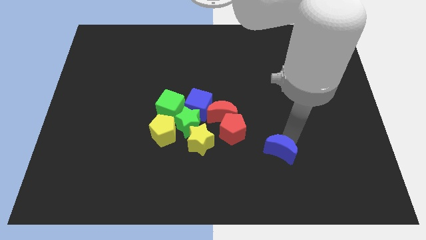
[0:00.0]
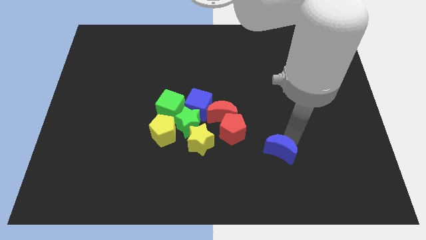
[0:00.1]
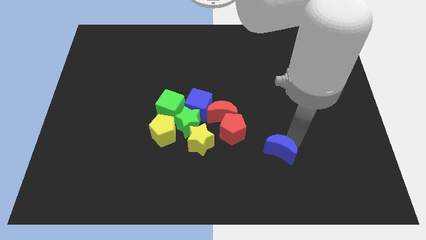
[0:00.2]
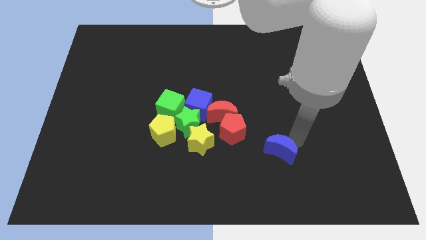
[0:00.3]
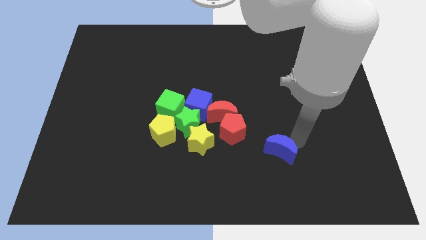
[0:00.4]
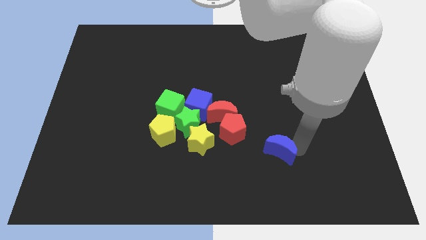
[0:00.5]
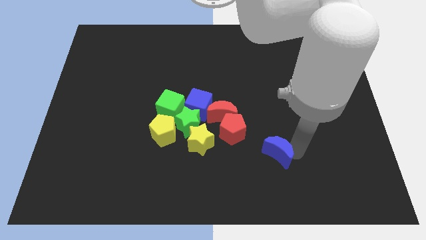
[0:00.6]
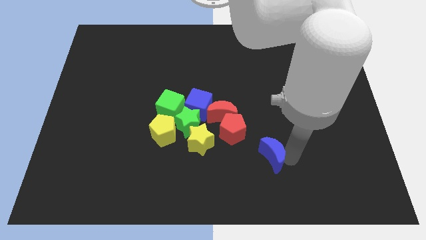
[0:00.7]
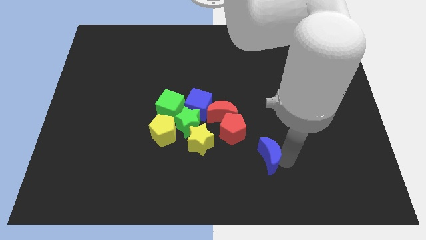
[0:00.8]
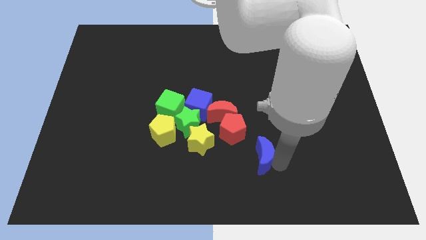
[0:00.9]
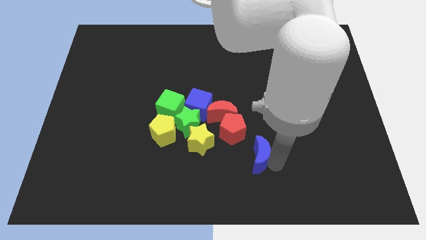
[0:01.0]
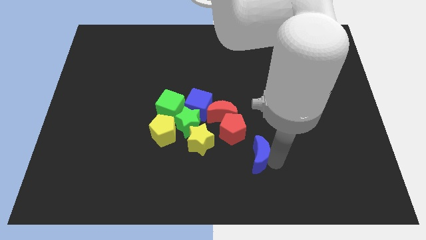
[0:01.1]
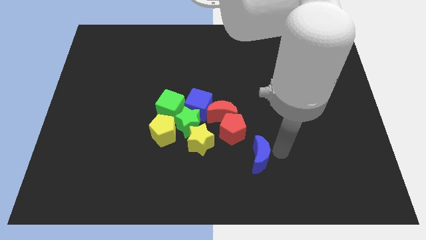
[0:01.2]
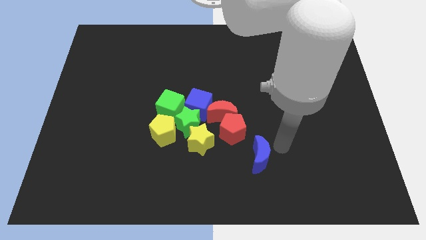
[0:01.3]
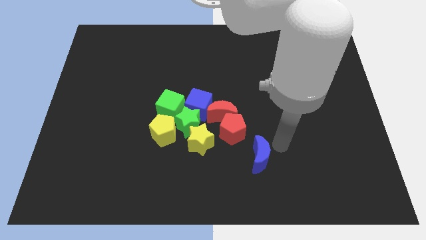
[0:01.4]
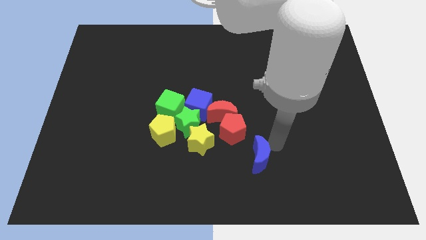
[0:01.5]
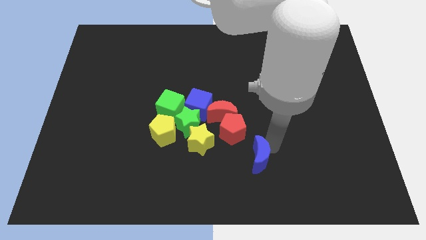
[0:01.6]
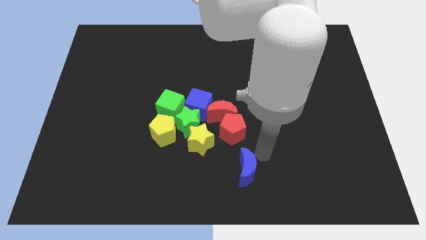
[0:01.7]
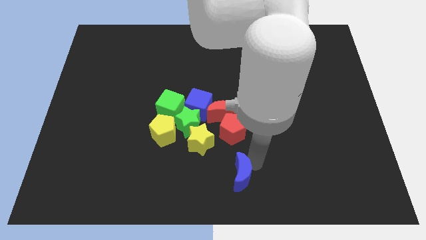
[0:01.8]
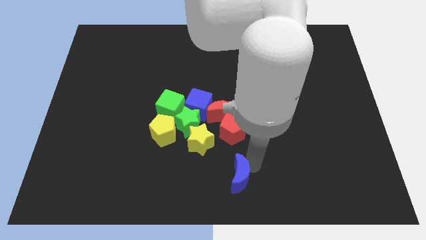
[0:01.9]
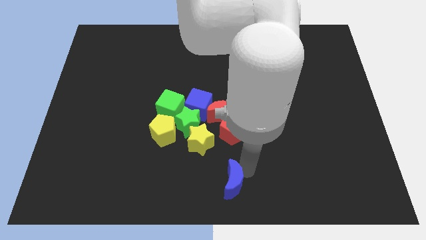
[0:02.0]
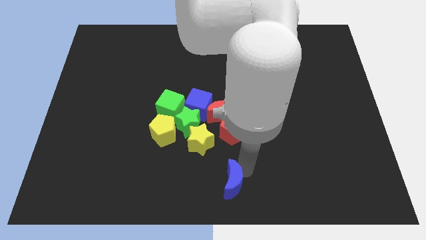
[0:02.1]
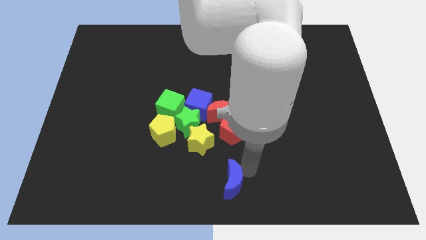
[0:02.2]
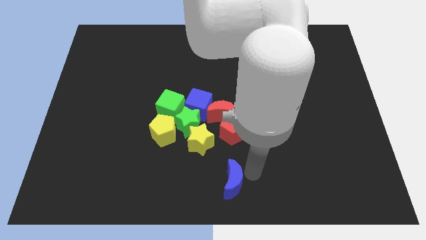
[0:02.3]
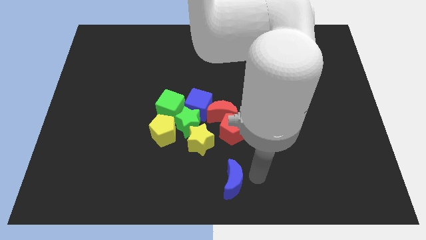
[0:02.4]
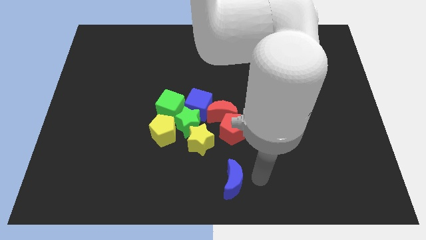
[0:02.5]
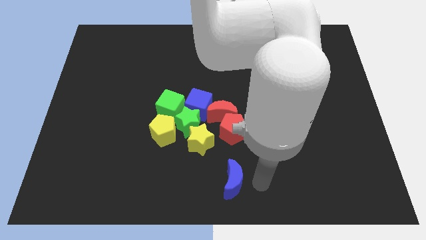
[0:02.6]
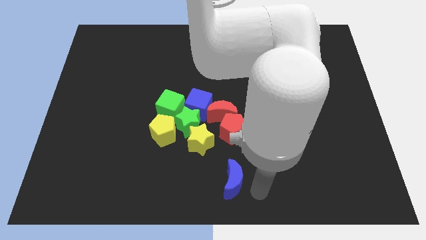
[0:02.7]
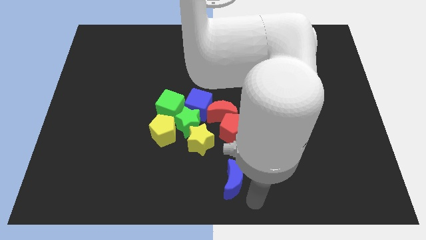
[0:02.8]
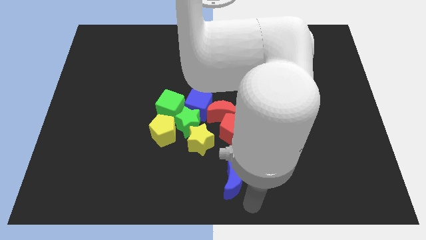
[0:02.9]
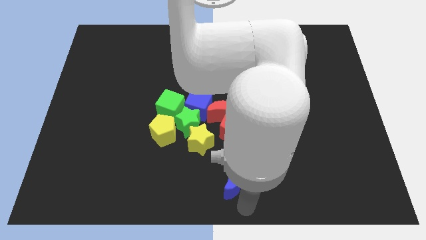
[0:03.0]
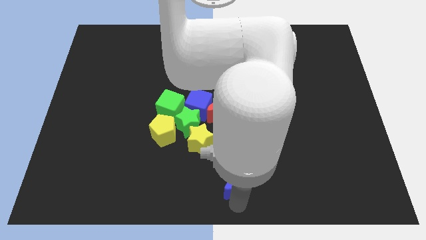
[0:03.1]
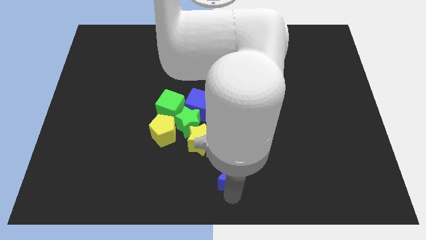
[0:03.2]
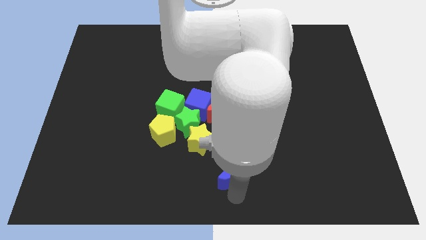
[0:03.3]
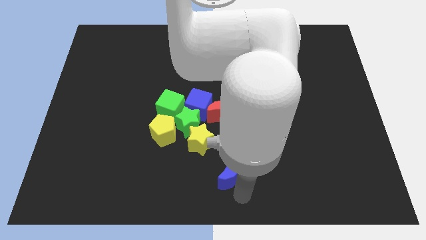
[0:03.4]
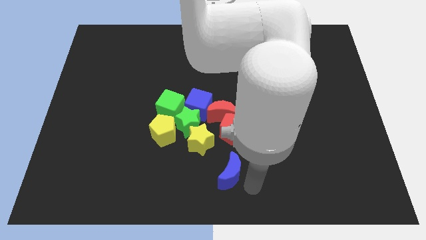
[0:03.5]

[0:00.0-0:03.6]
move the blue crescent to the bottom side of the red pentagon

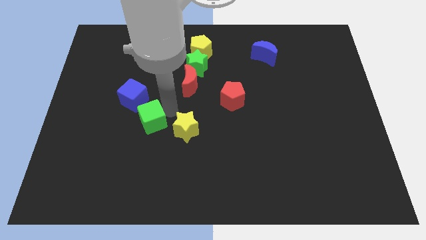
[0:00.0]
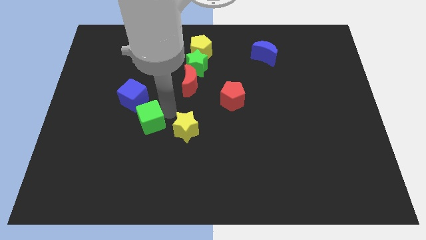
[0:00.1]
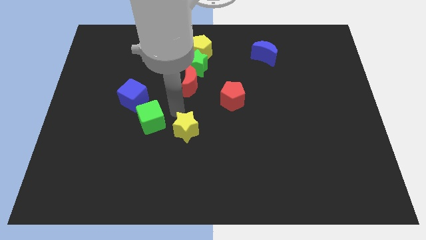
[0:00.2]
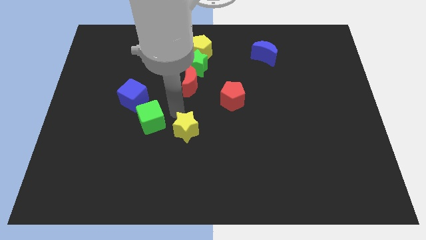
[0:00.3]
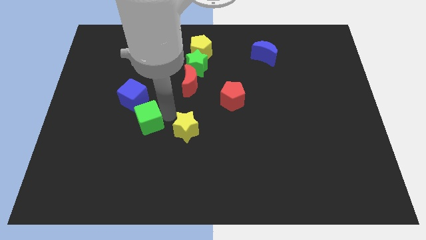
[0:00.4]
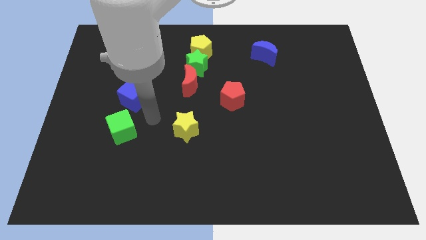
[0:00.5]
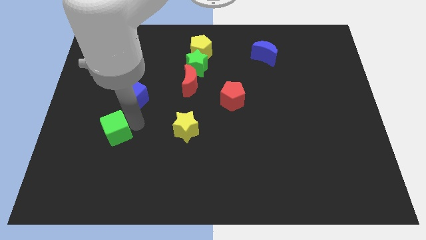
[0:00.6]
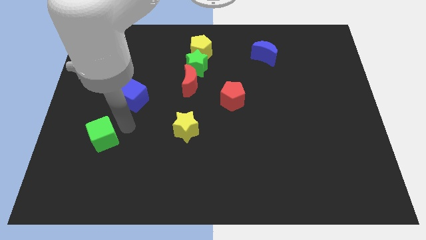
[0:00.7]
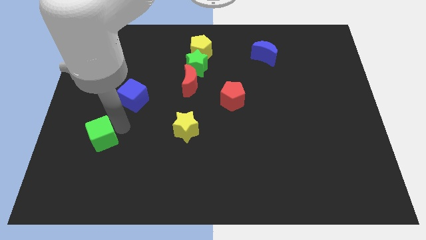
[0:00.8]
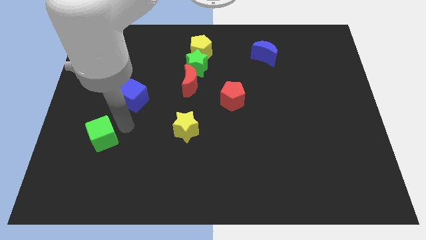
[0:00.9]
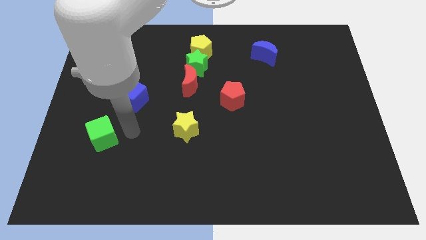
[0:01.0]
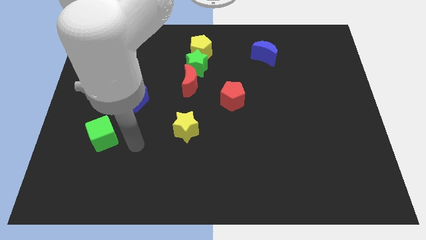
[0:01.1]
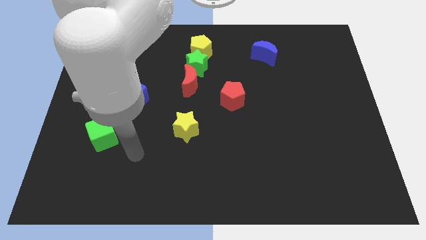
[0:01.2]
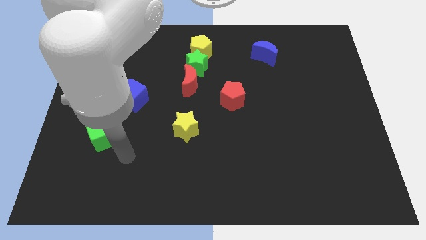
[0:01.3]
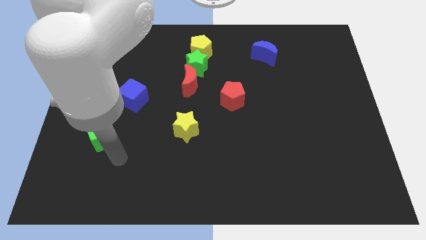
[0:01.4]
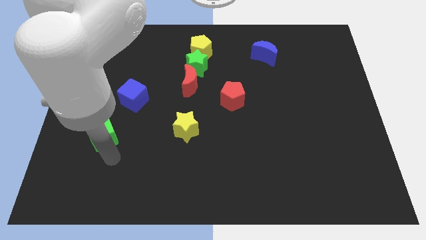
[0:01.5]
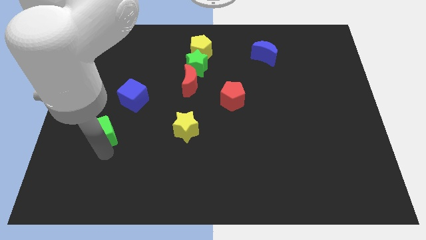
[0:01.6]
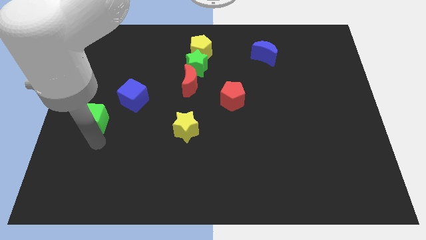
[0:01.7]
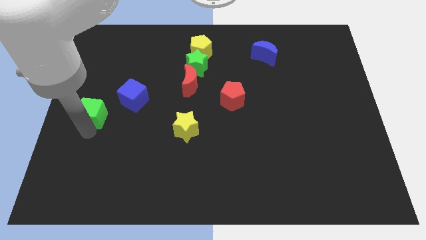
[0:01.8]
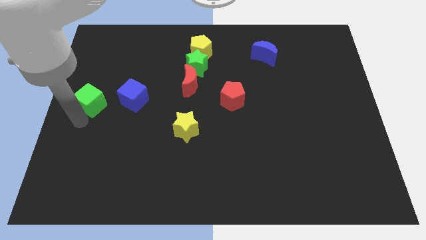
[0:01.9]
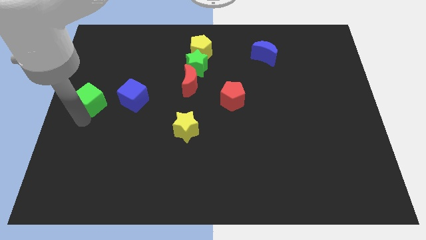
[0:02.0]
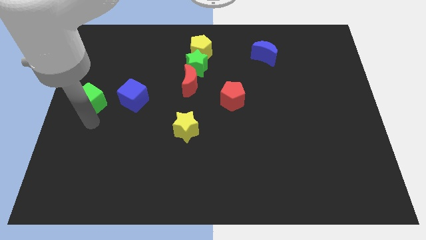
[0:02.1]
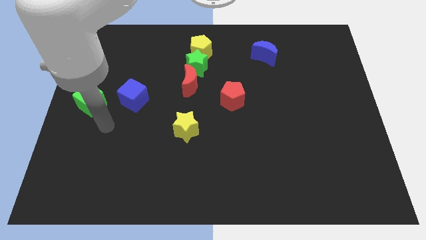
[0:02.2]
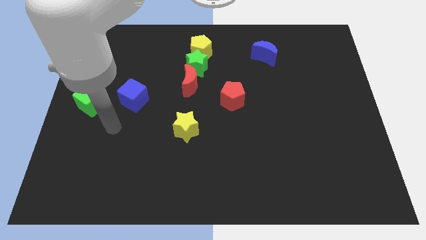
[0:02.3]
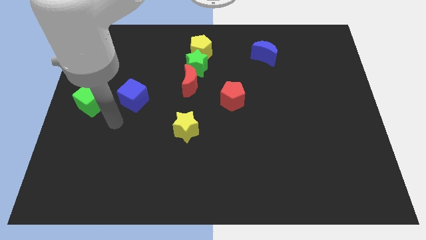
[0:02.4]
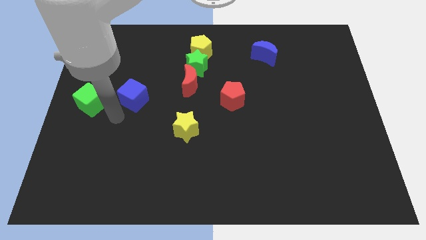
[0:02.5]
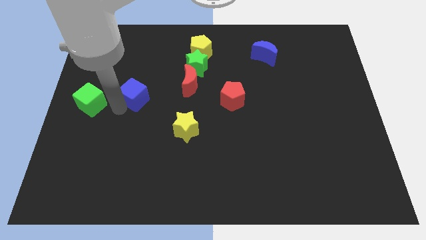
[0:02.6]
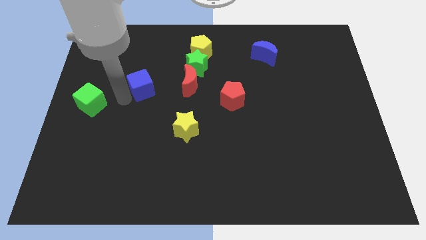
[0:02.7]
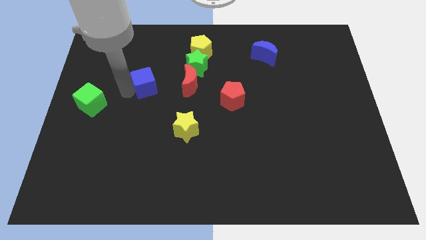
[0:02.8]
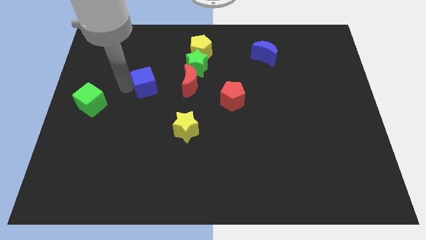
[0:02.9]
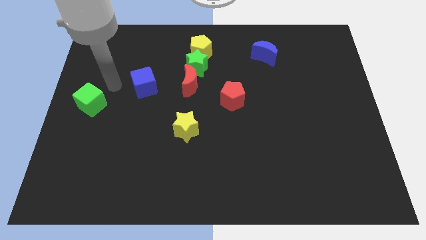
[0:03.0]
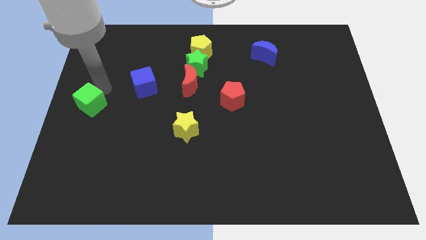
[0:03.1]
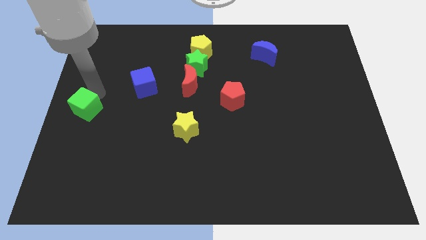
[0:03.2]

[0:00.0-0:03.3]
push green cube away from blue cube

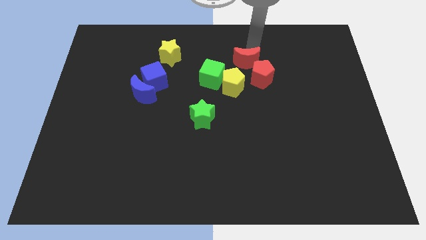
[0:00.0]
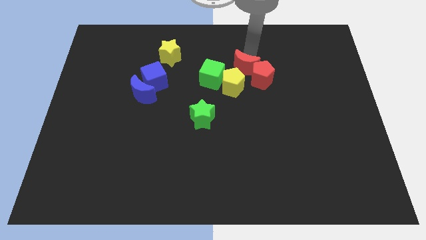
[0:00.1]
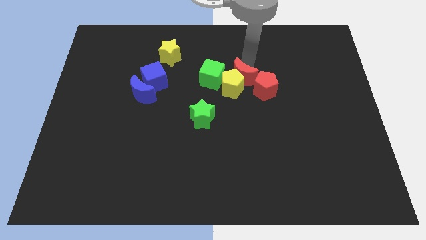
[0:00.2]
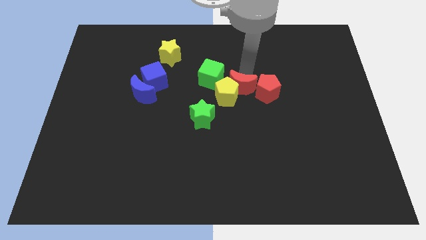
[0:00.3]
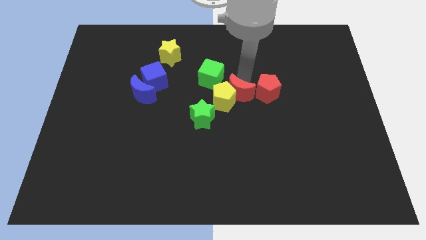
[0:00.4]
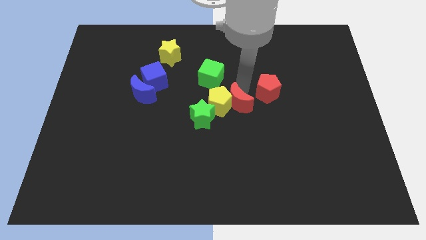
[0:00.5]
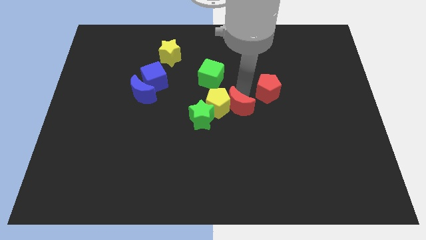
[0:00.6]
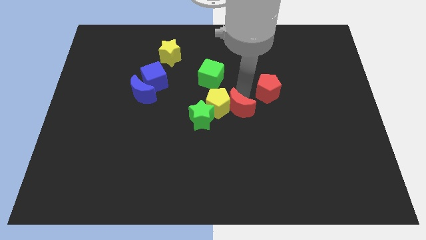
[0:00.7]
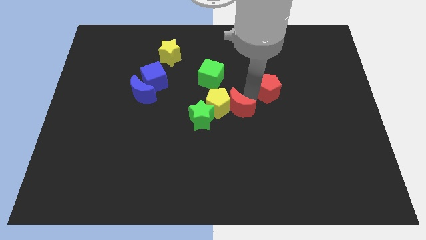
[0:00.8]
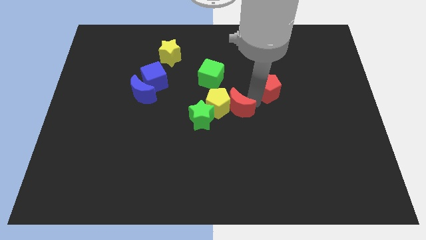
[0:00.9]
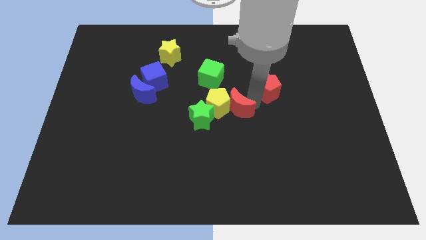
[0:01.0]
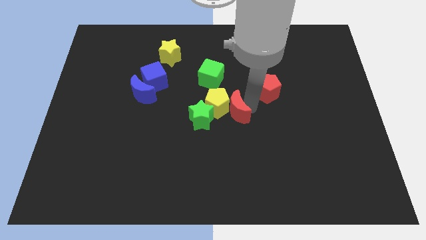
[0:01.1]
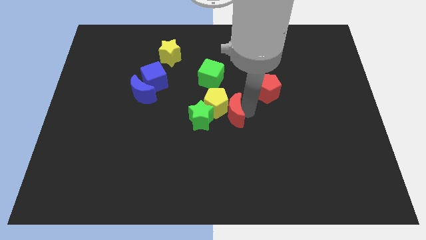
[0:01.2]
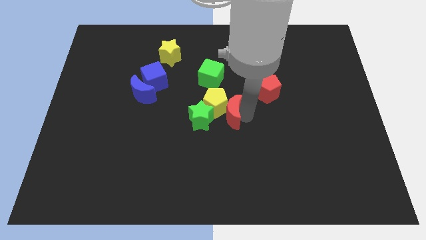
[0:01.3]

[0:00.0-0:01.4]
push red crescent and yellow pentagon into green star

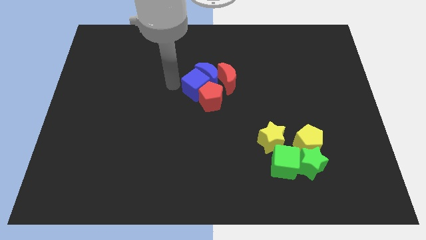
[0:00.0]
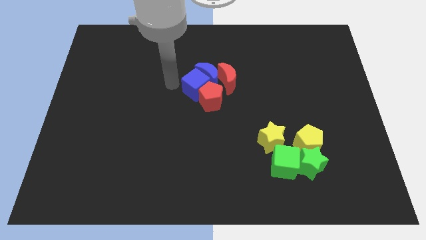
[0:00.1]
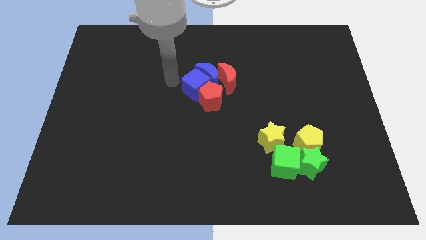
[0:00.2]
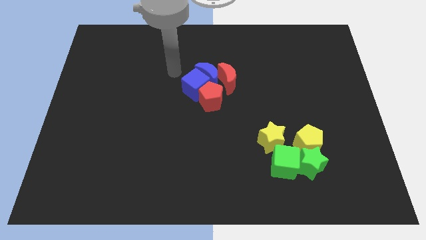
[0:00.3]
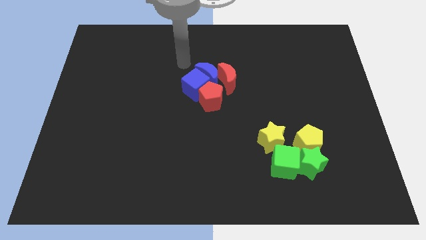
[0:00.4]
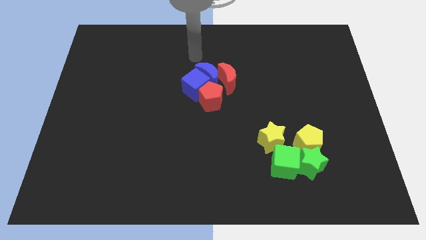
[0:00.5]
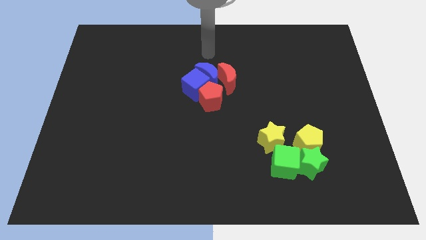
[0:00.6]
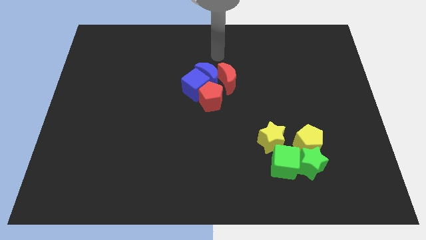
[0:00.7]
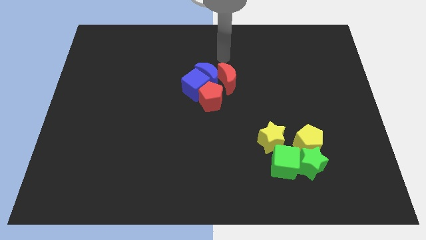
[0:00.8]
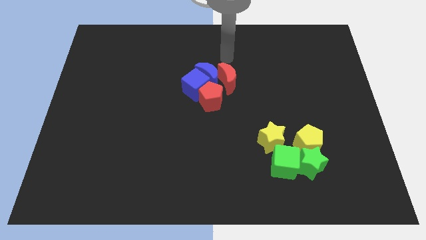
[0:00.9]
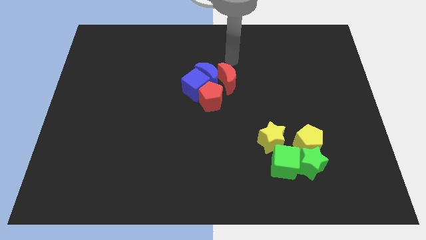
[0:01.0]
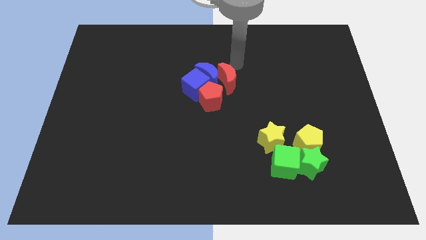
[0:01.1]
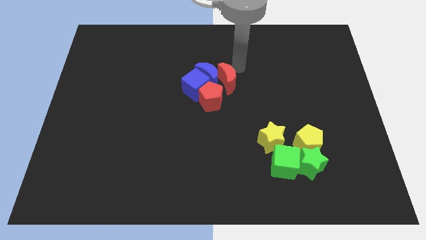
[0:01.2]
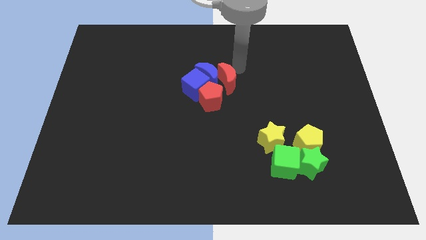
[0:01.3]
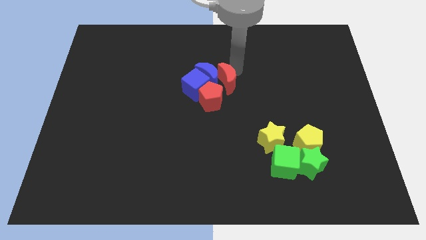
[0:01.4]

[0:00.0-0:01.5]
move your arm to the right side of the red crescent
